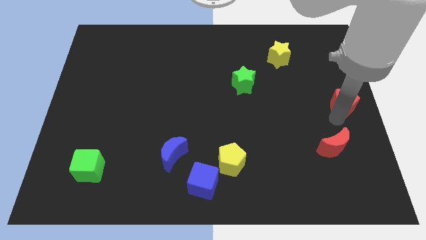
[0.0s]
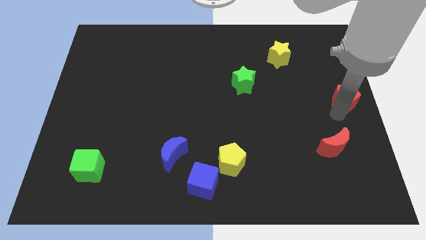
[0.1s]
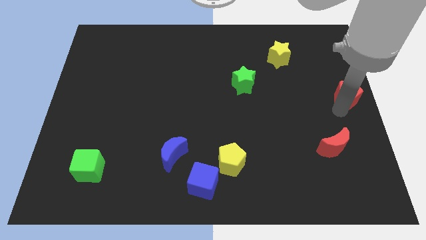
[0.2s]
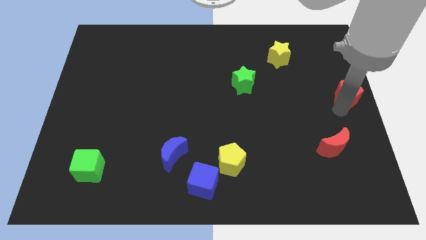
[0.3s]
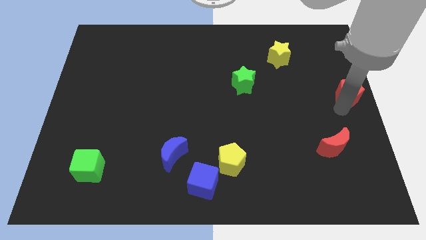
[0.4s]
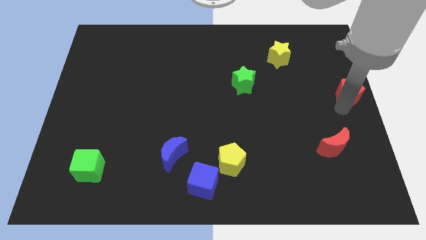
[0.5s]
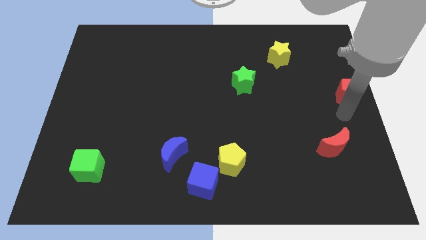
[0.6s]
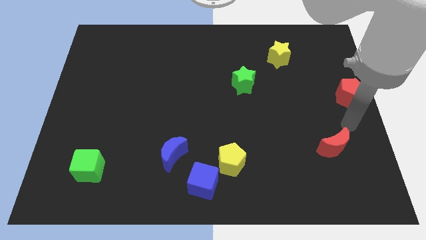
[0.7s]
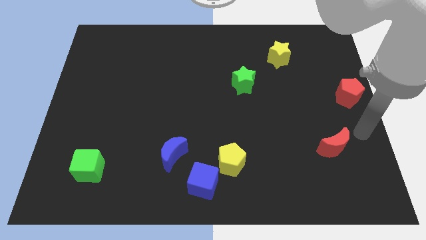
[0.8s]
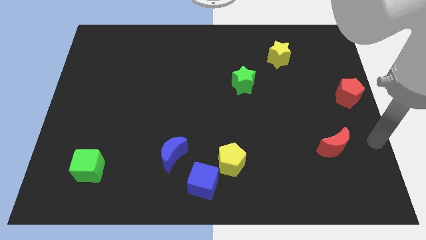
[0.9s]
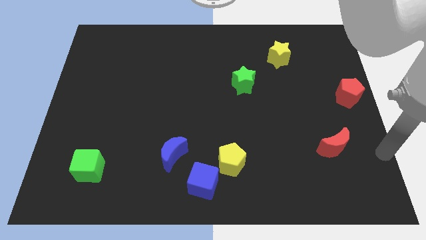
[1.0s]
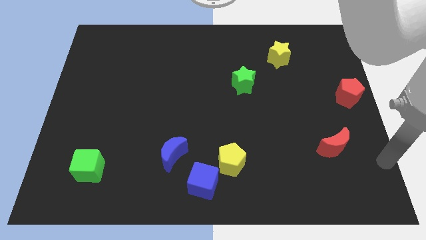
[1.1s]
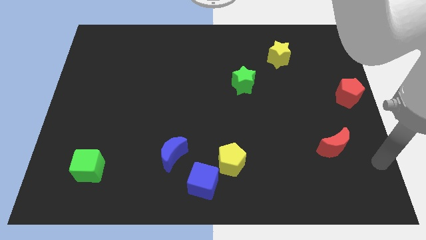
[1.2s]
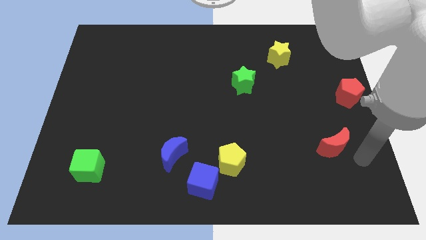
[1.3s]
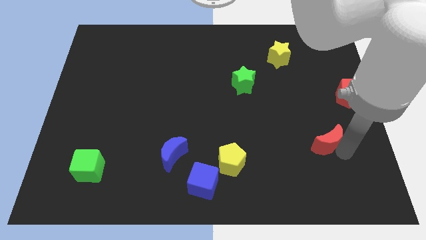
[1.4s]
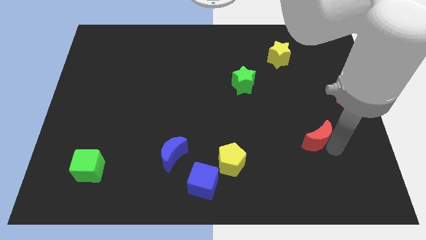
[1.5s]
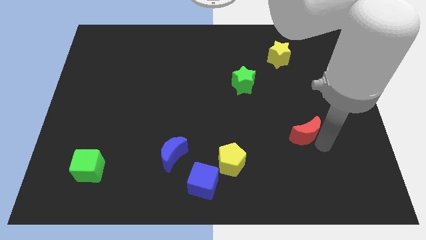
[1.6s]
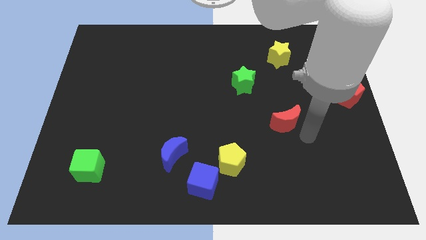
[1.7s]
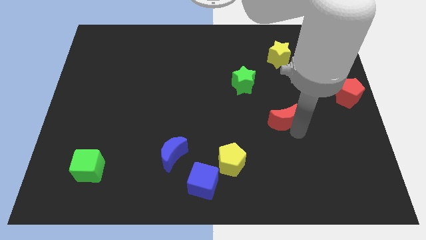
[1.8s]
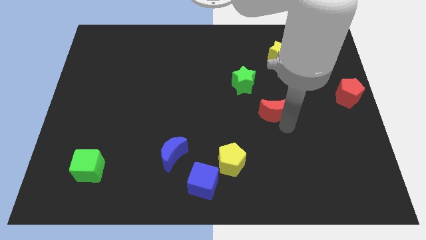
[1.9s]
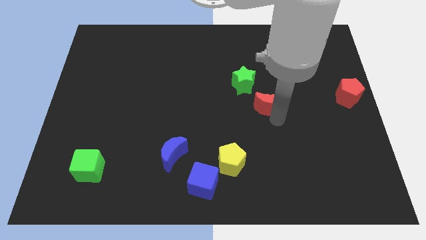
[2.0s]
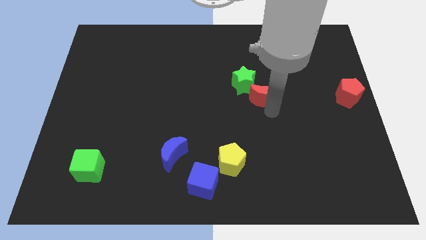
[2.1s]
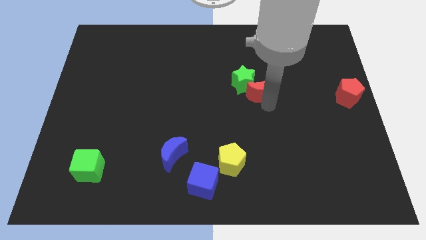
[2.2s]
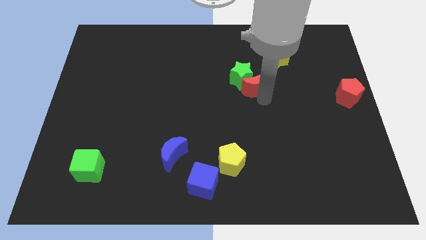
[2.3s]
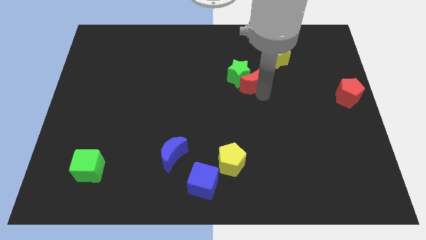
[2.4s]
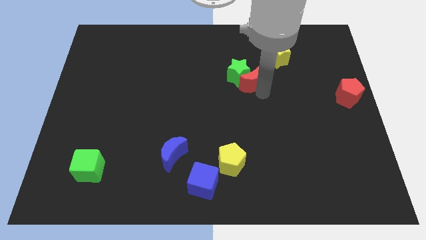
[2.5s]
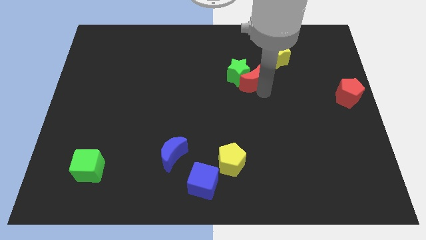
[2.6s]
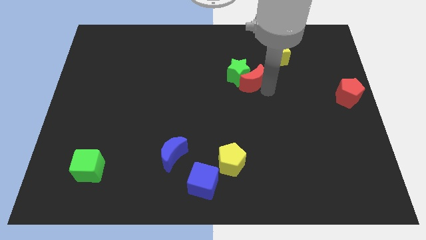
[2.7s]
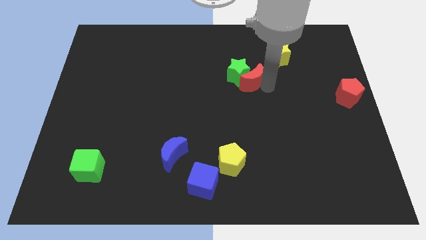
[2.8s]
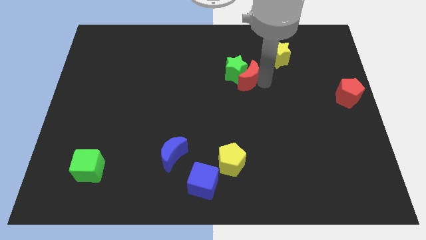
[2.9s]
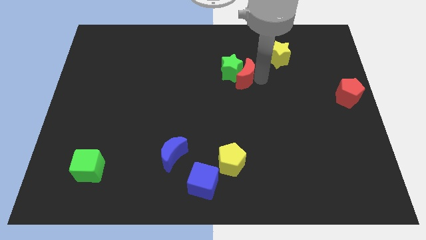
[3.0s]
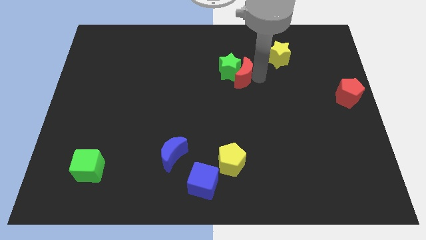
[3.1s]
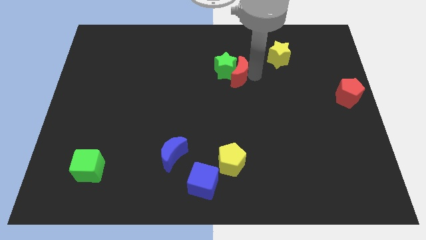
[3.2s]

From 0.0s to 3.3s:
attach the red moon to the green star

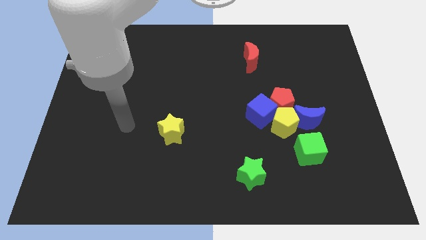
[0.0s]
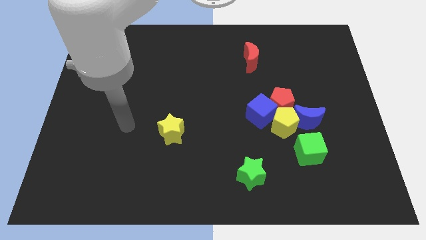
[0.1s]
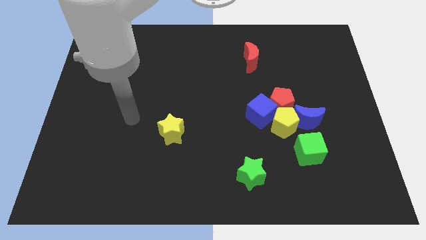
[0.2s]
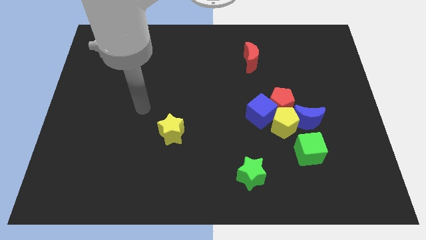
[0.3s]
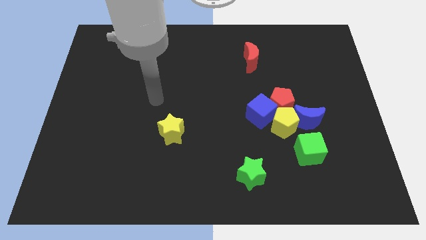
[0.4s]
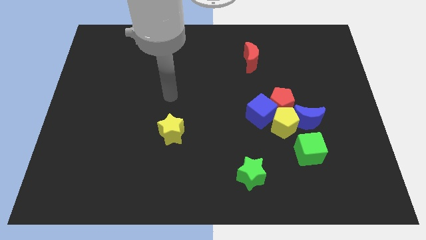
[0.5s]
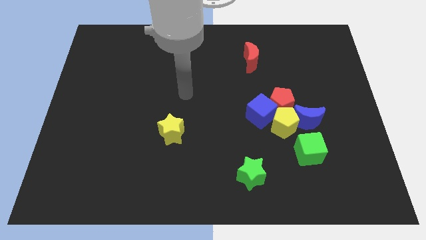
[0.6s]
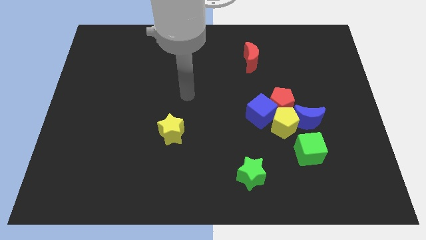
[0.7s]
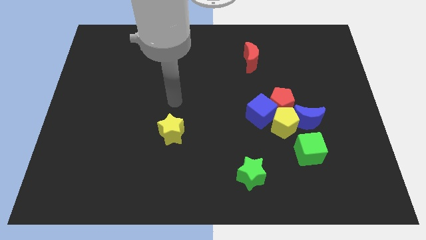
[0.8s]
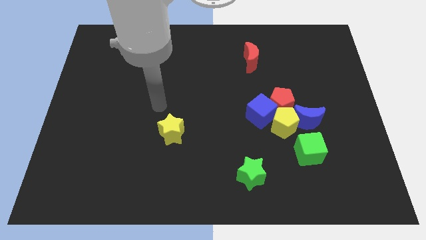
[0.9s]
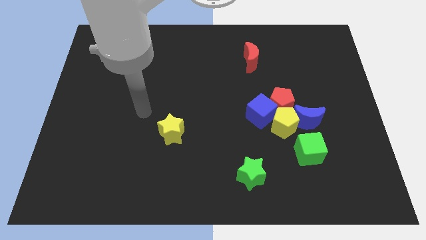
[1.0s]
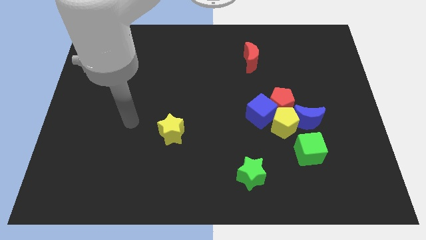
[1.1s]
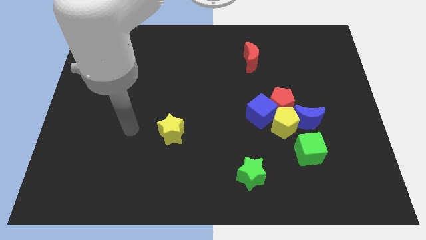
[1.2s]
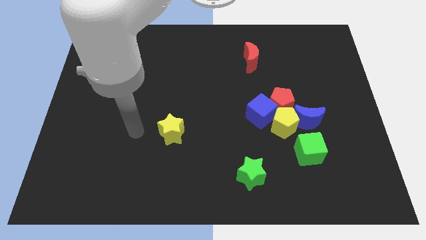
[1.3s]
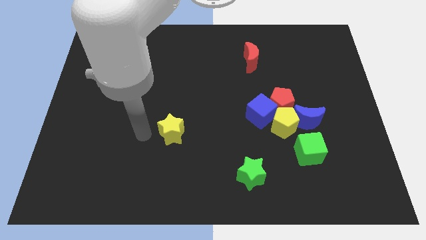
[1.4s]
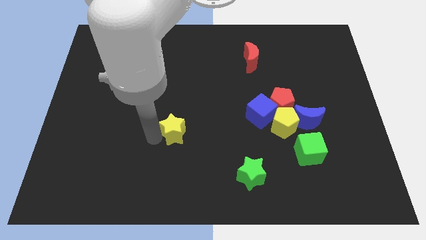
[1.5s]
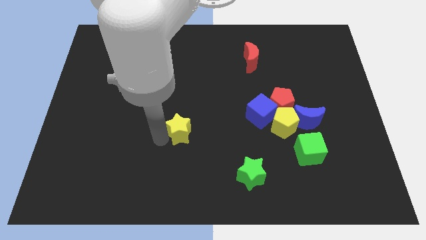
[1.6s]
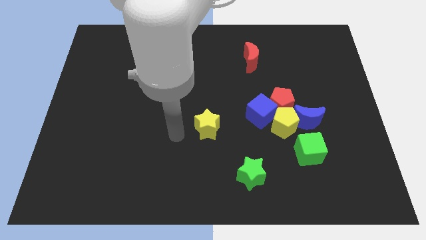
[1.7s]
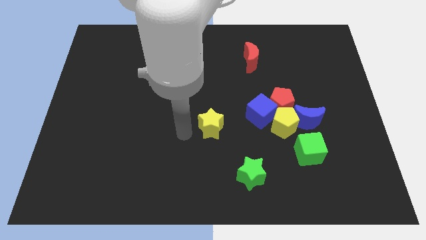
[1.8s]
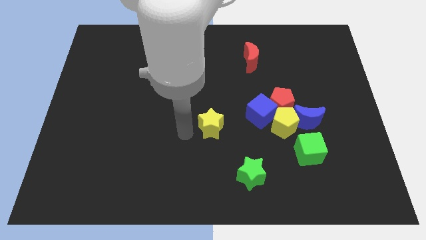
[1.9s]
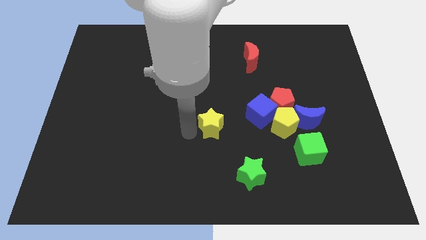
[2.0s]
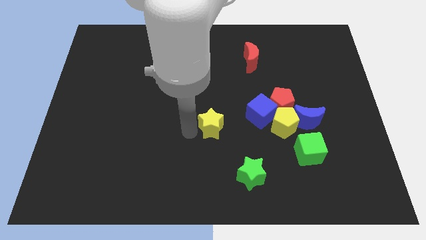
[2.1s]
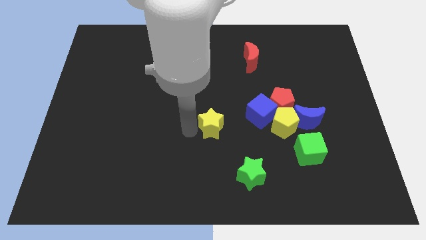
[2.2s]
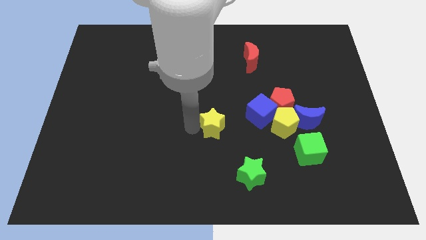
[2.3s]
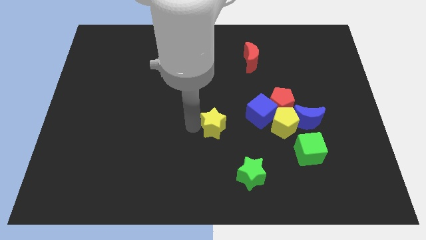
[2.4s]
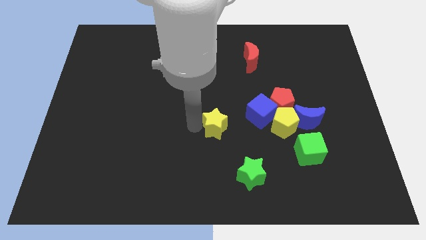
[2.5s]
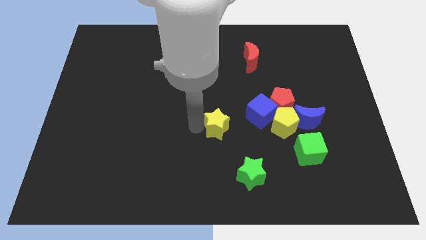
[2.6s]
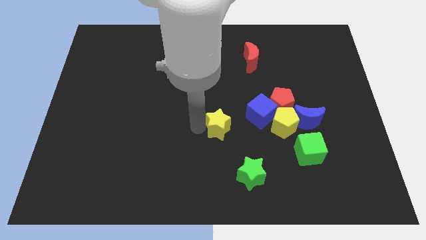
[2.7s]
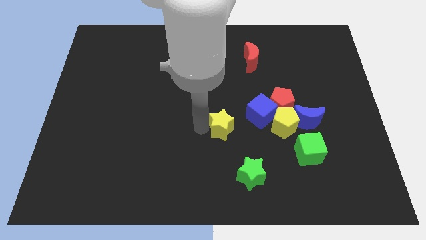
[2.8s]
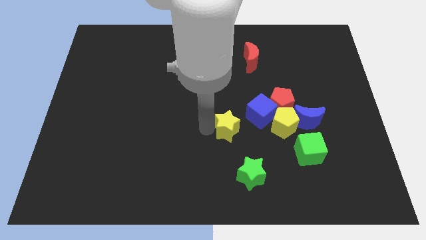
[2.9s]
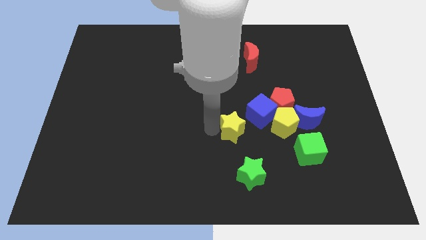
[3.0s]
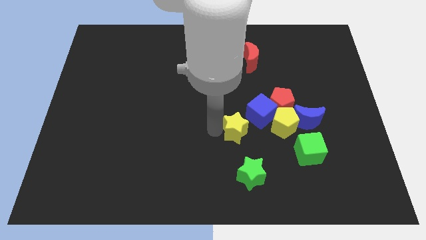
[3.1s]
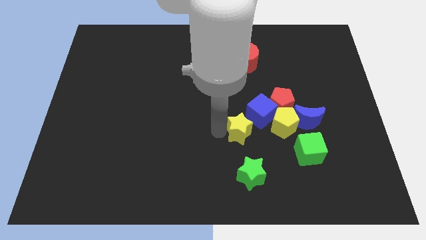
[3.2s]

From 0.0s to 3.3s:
place yellow star to the left of blue cube

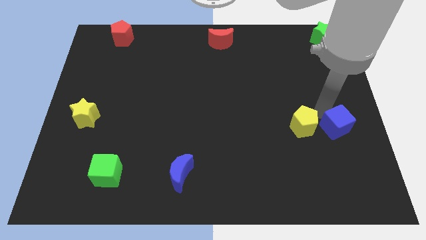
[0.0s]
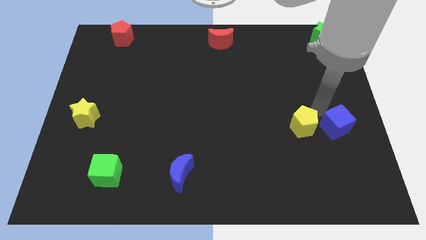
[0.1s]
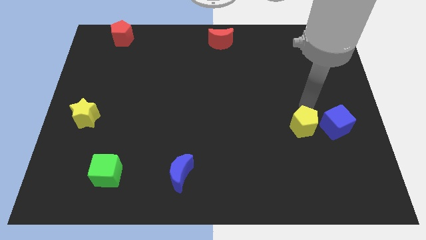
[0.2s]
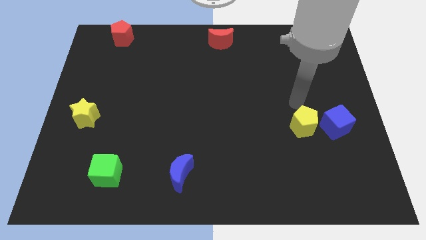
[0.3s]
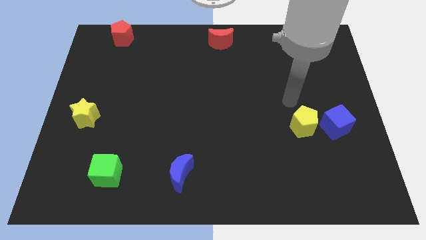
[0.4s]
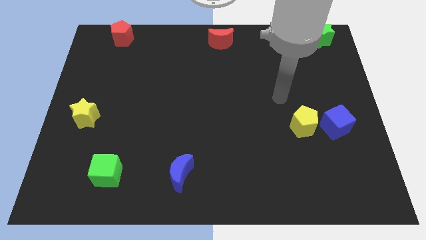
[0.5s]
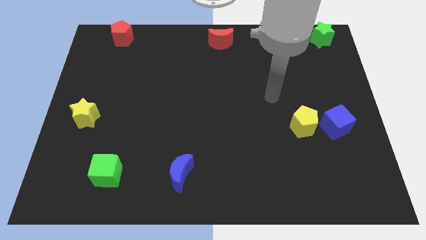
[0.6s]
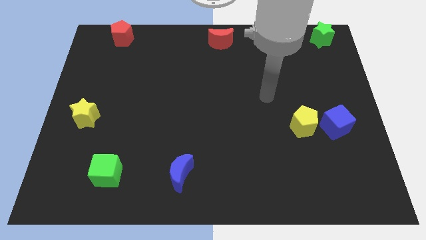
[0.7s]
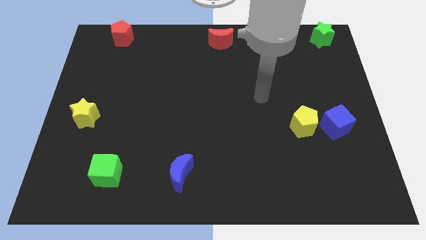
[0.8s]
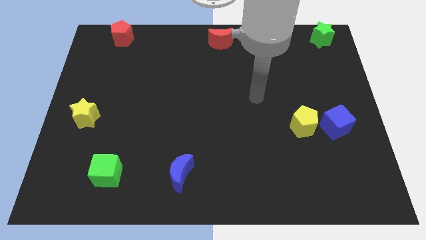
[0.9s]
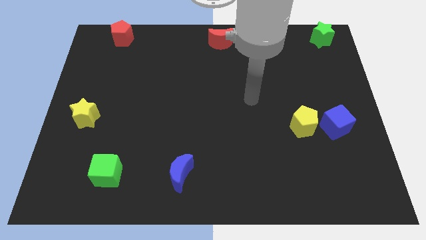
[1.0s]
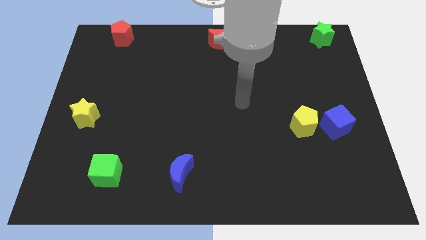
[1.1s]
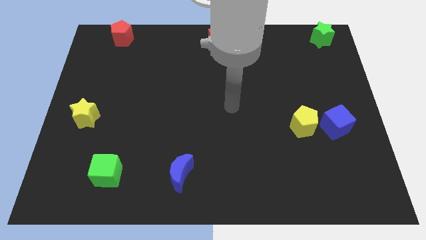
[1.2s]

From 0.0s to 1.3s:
move your arm away from the blue cube

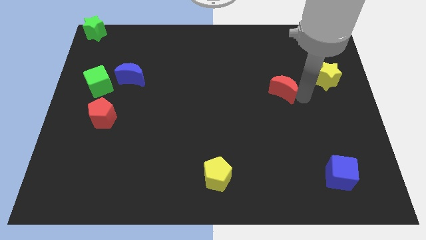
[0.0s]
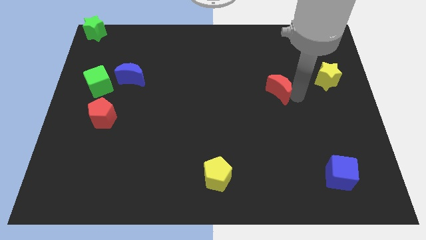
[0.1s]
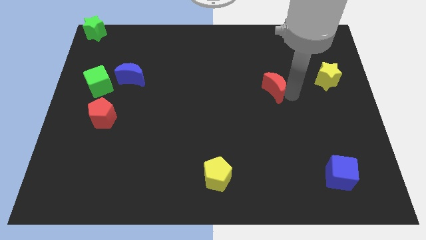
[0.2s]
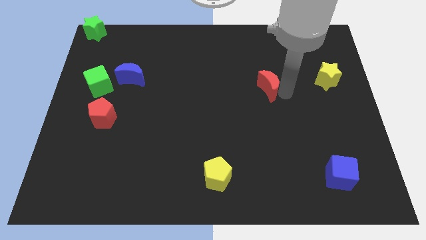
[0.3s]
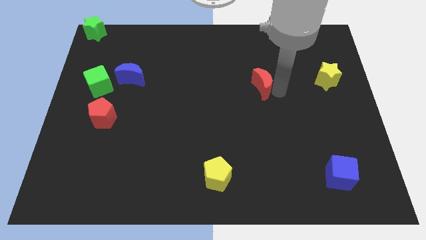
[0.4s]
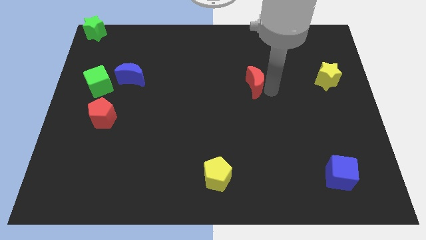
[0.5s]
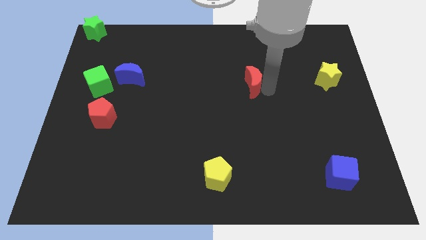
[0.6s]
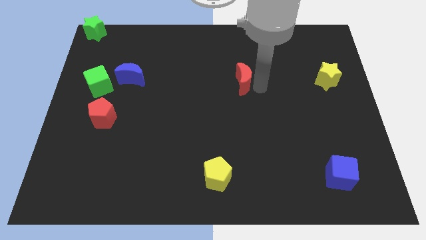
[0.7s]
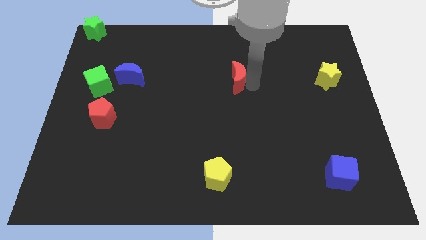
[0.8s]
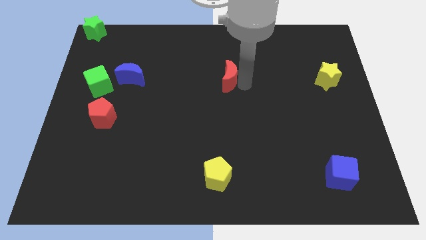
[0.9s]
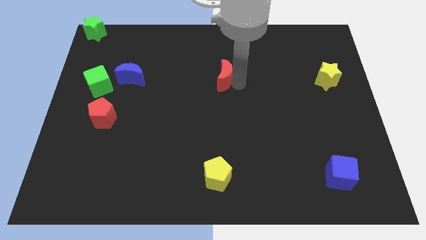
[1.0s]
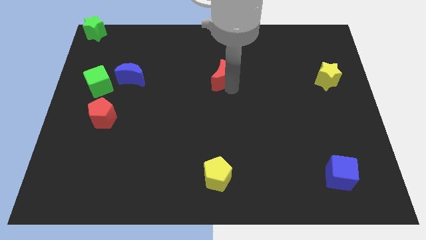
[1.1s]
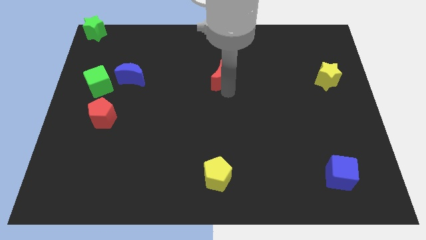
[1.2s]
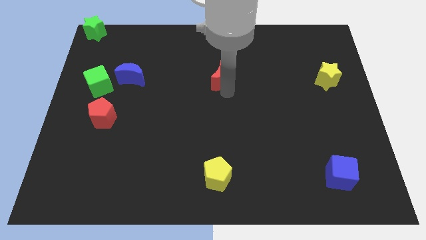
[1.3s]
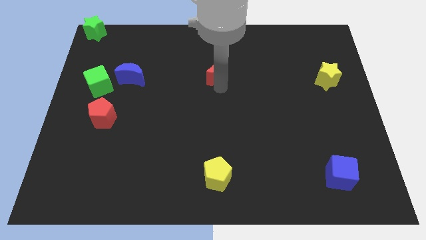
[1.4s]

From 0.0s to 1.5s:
place the red moon to the right of the blue moon
